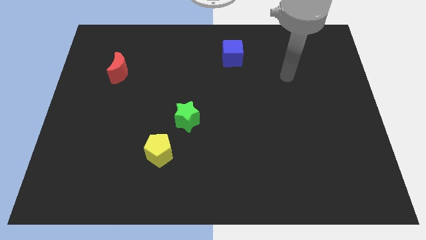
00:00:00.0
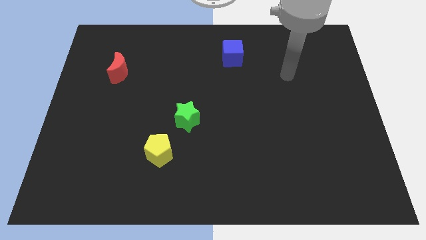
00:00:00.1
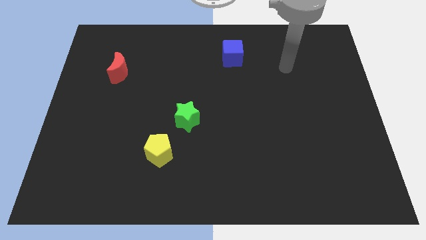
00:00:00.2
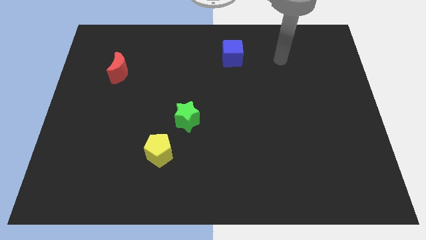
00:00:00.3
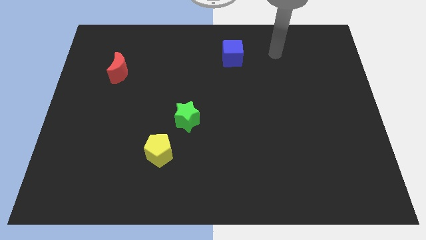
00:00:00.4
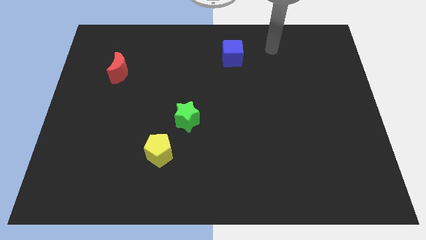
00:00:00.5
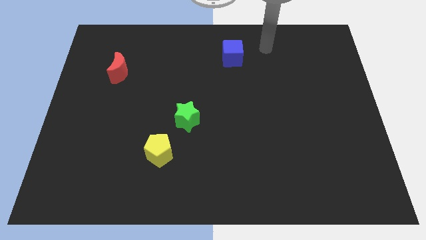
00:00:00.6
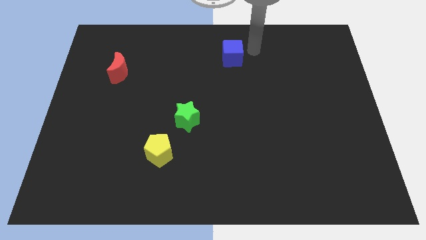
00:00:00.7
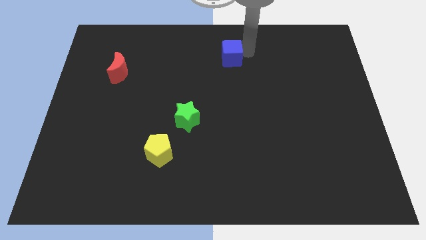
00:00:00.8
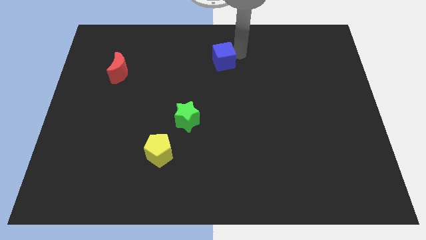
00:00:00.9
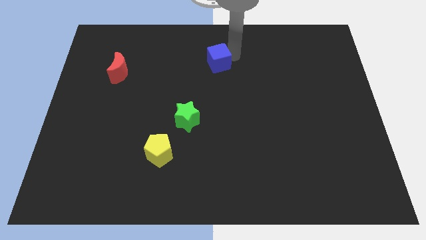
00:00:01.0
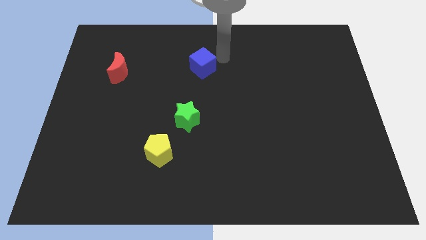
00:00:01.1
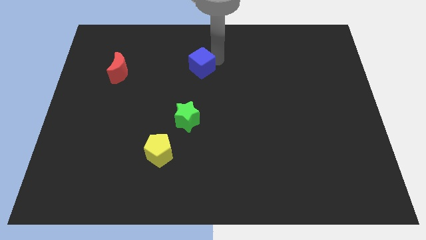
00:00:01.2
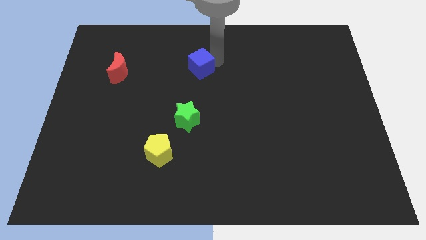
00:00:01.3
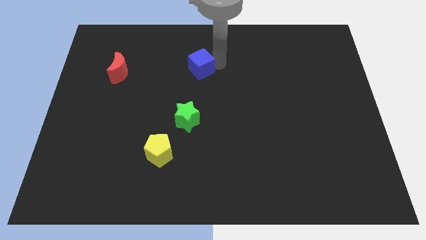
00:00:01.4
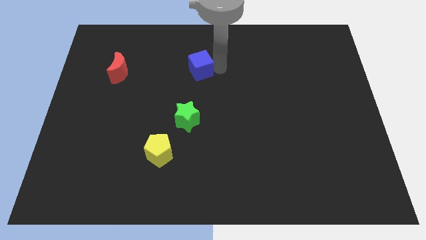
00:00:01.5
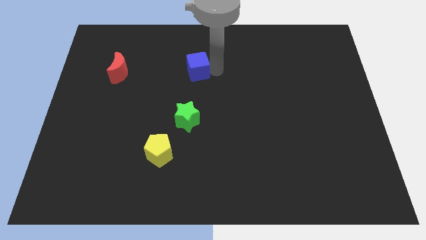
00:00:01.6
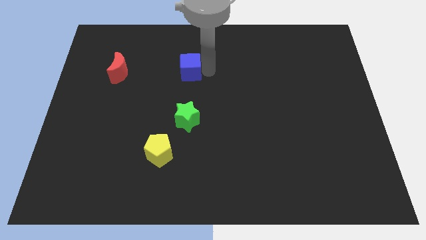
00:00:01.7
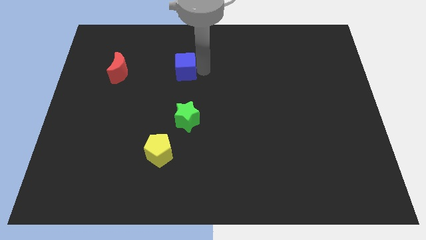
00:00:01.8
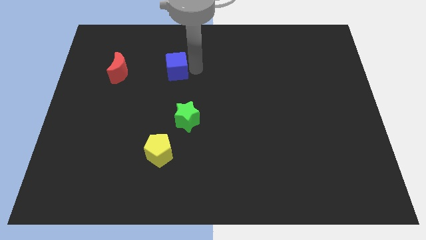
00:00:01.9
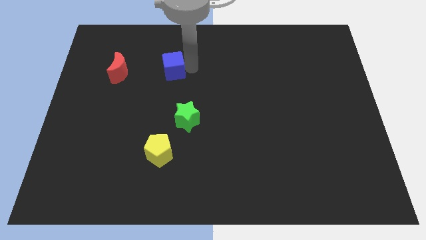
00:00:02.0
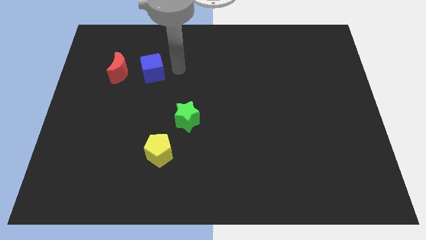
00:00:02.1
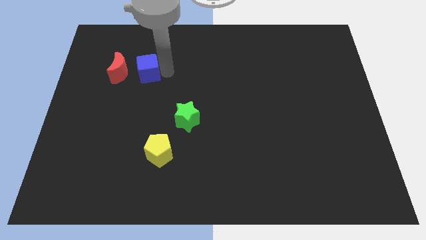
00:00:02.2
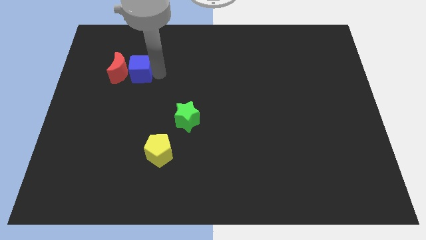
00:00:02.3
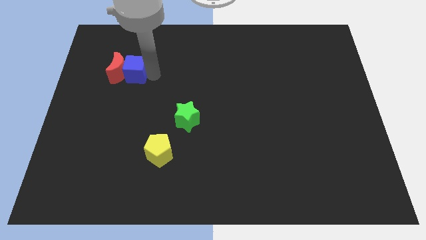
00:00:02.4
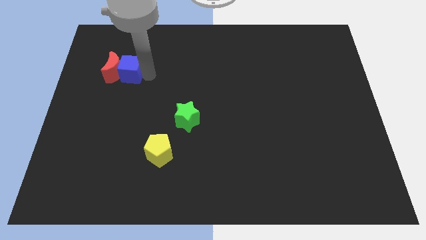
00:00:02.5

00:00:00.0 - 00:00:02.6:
put the blue cube close to the red block

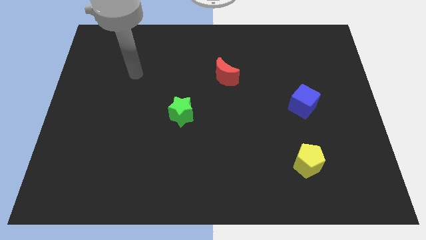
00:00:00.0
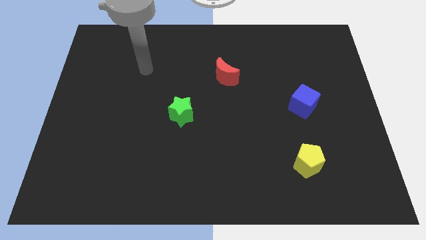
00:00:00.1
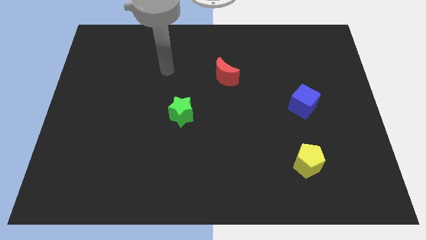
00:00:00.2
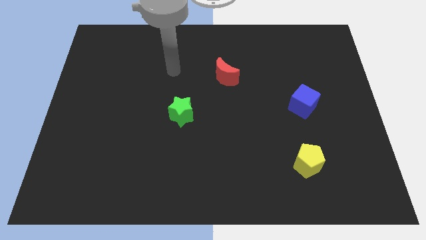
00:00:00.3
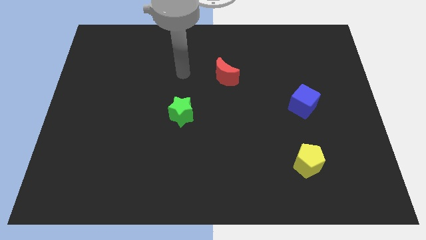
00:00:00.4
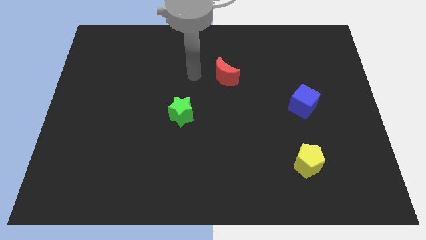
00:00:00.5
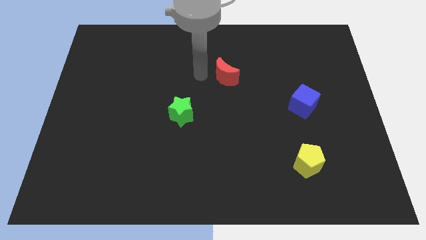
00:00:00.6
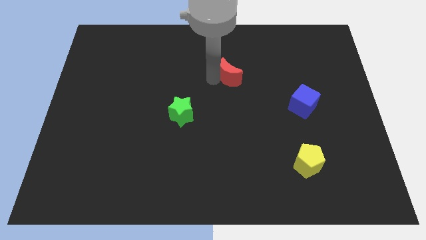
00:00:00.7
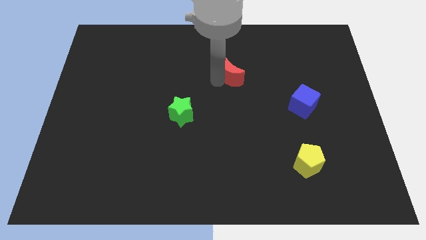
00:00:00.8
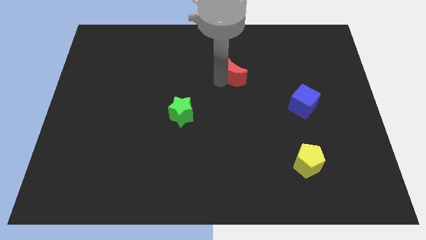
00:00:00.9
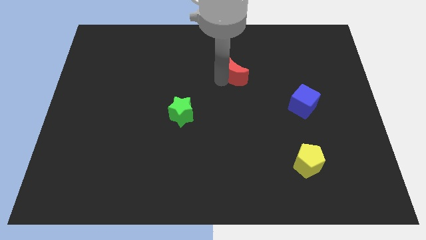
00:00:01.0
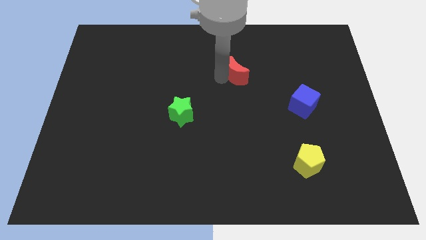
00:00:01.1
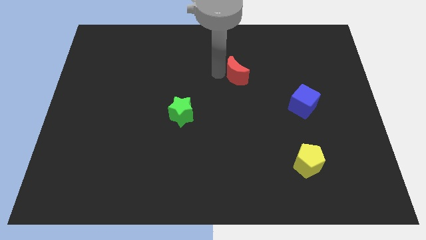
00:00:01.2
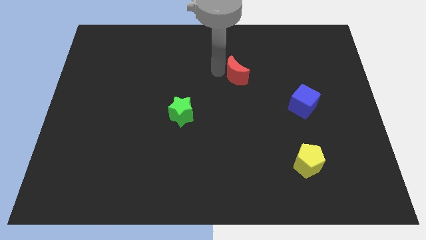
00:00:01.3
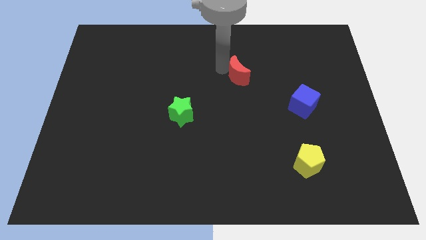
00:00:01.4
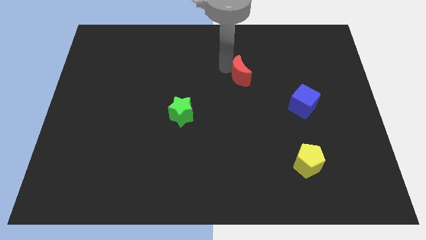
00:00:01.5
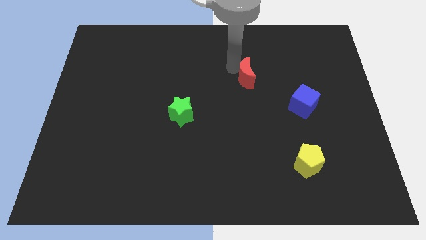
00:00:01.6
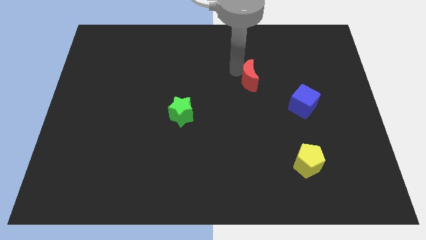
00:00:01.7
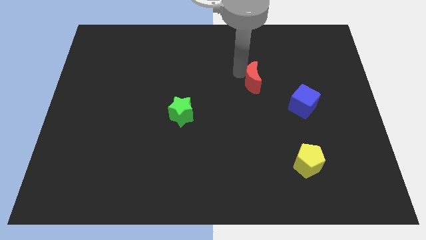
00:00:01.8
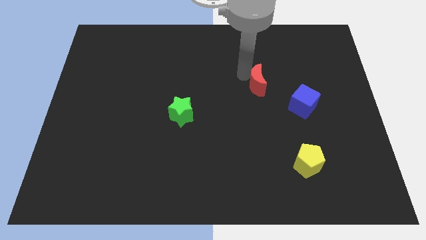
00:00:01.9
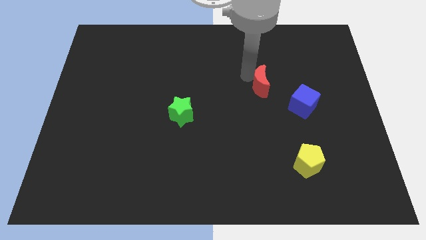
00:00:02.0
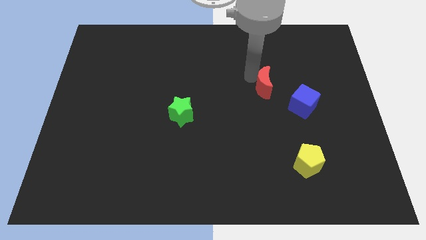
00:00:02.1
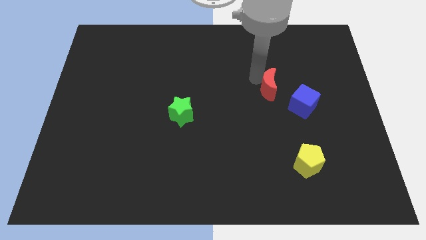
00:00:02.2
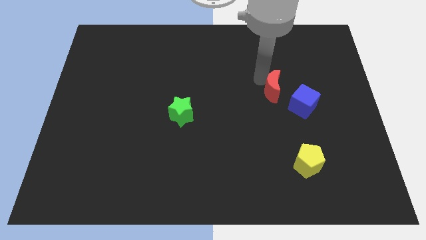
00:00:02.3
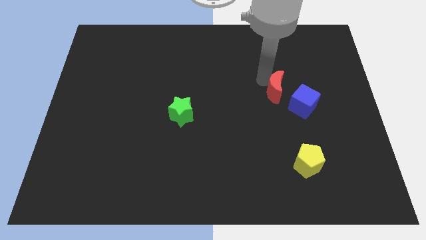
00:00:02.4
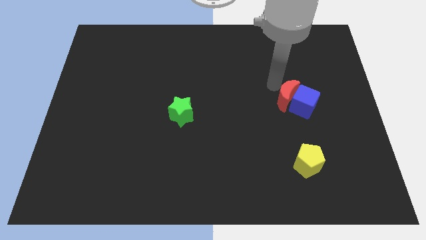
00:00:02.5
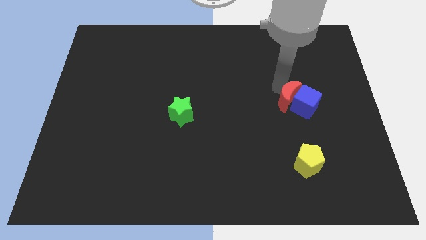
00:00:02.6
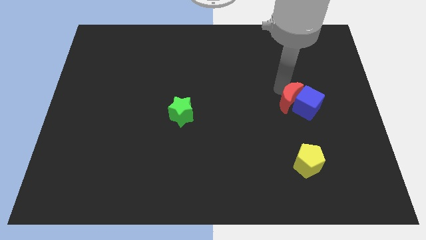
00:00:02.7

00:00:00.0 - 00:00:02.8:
move the red block next to the cube

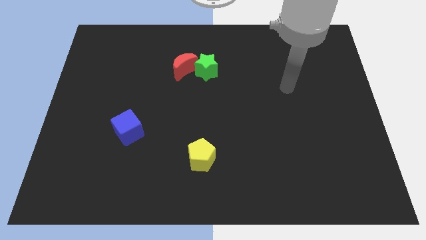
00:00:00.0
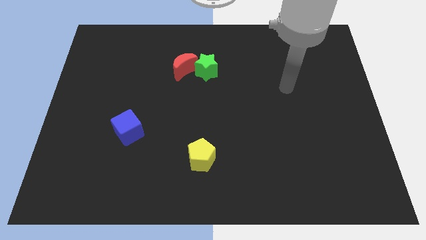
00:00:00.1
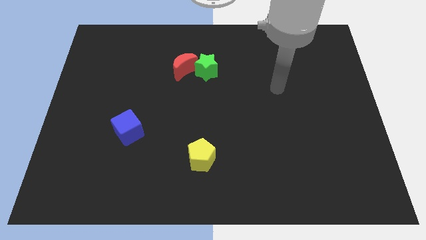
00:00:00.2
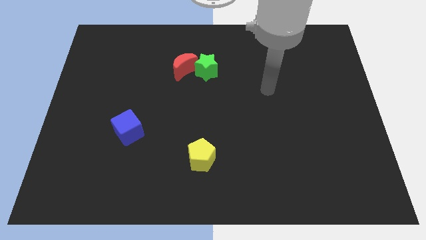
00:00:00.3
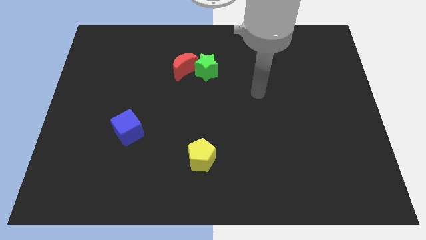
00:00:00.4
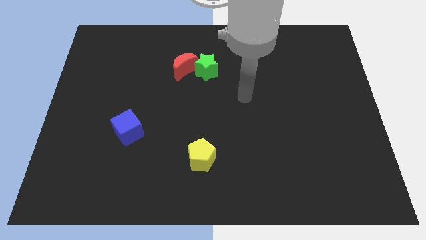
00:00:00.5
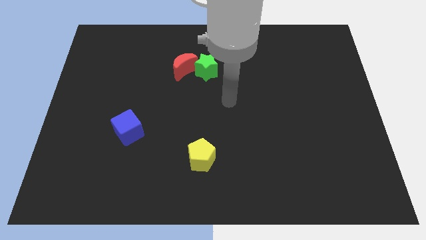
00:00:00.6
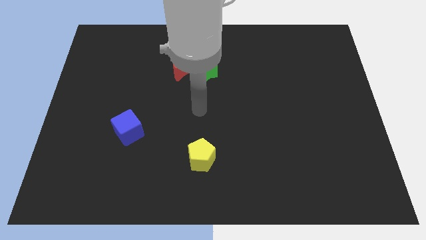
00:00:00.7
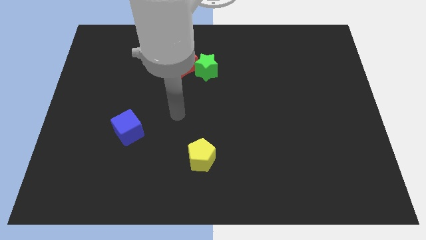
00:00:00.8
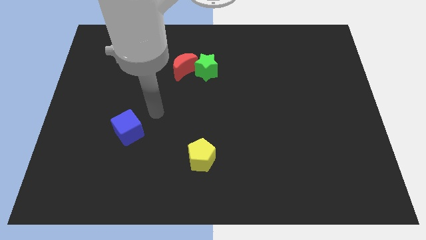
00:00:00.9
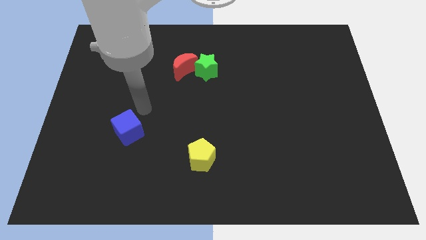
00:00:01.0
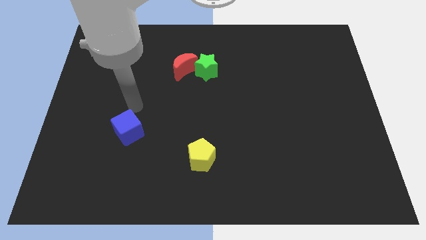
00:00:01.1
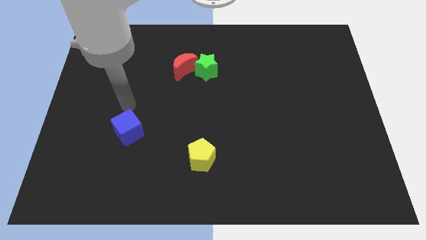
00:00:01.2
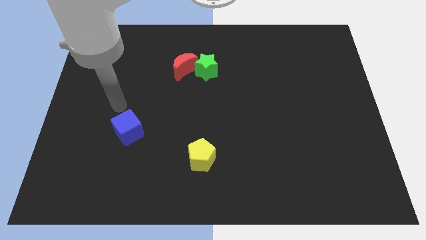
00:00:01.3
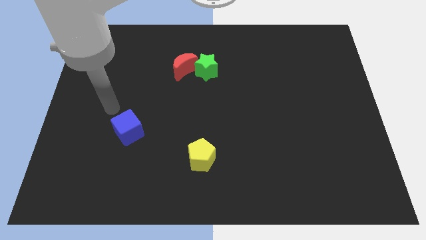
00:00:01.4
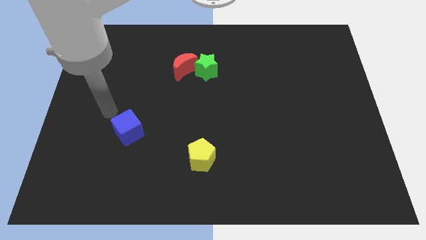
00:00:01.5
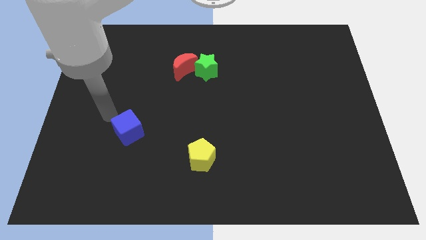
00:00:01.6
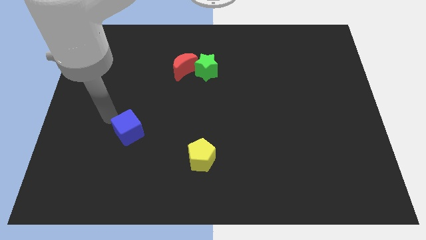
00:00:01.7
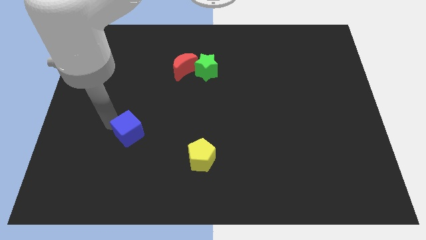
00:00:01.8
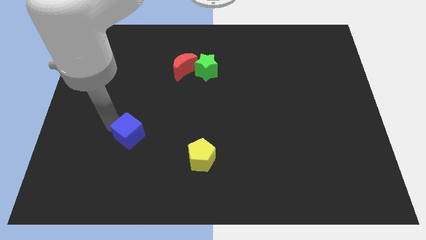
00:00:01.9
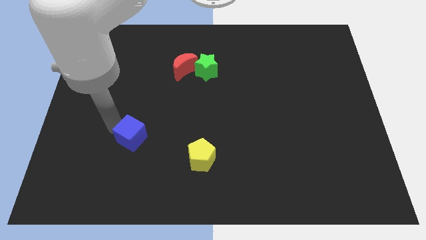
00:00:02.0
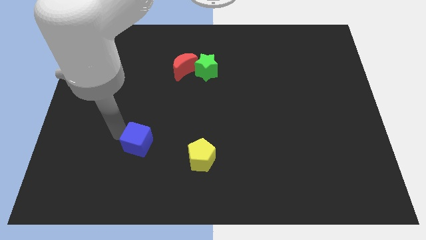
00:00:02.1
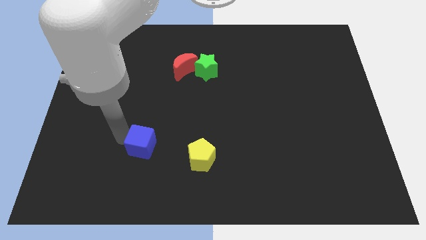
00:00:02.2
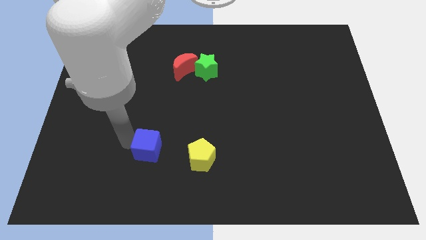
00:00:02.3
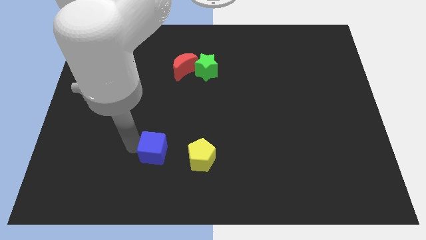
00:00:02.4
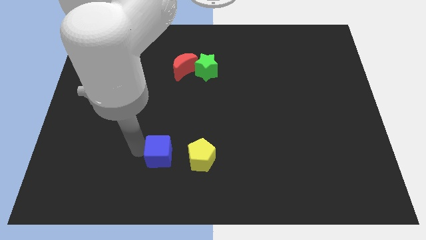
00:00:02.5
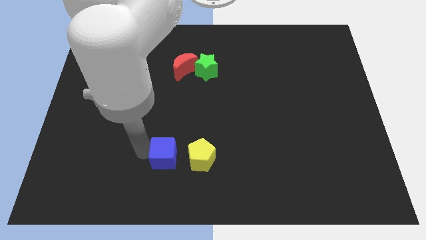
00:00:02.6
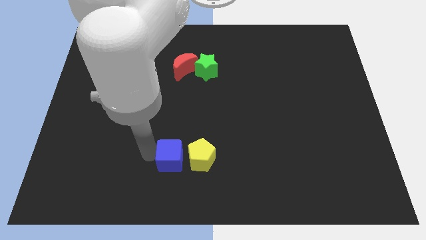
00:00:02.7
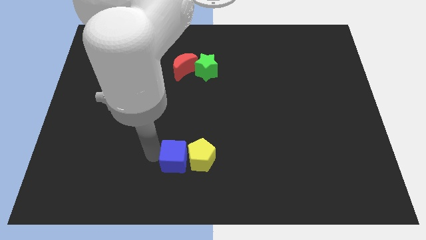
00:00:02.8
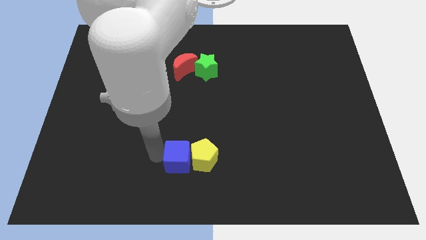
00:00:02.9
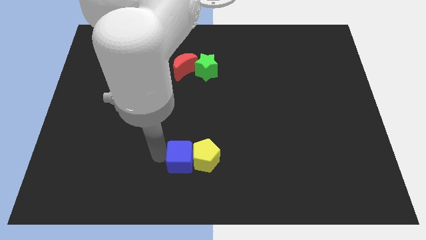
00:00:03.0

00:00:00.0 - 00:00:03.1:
slide the blue block next to the yellow block

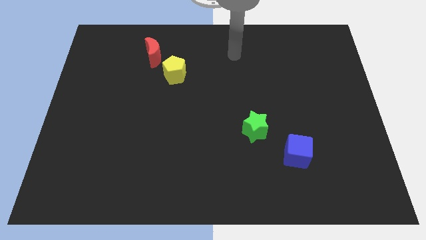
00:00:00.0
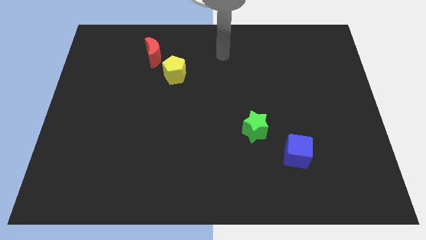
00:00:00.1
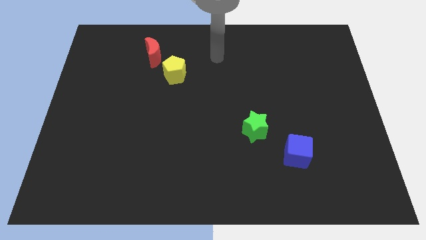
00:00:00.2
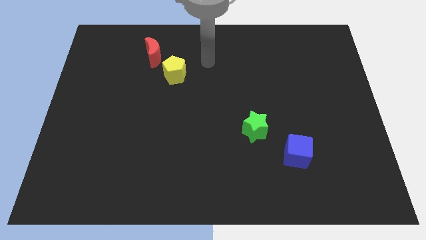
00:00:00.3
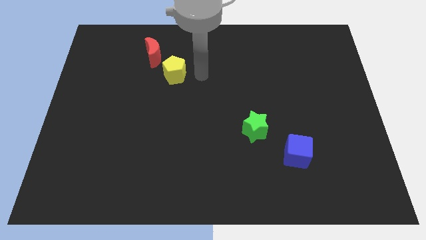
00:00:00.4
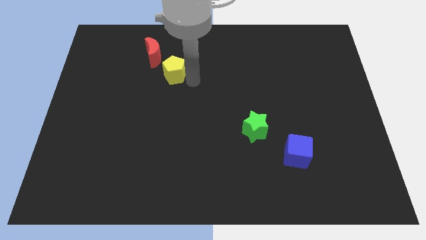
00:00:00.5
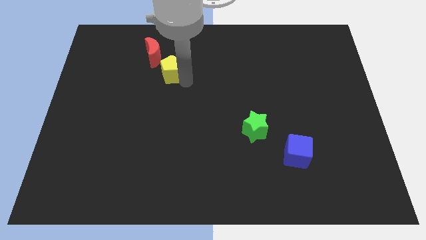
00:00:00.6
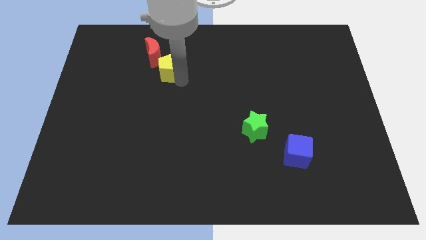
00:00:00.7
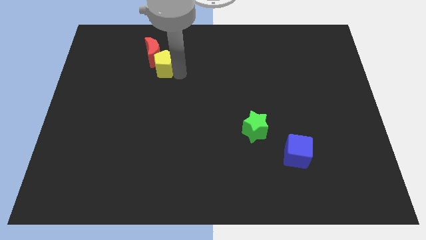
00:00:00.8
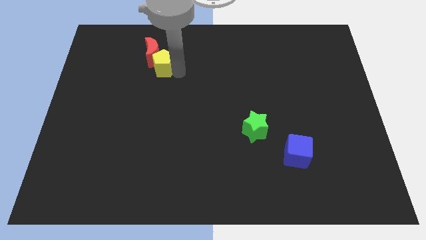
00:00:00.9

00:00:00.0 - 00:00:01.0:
slide the yellow pentagon next to the red moon
